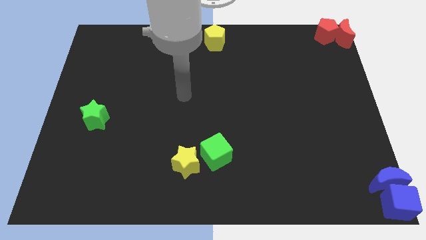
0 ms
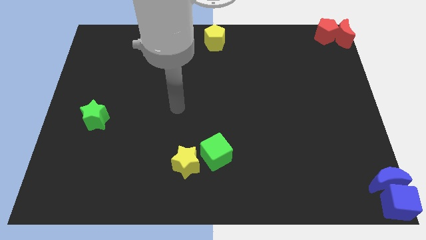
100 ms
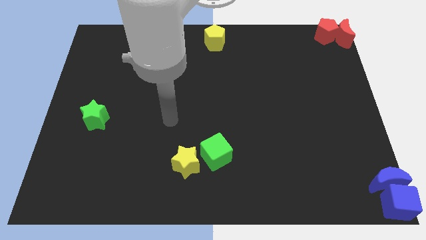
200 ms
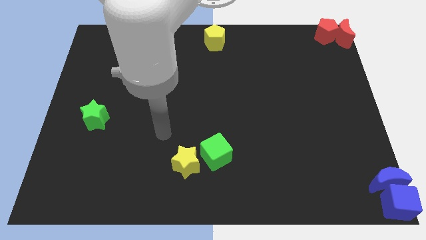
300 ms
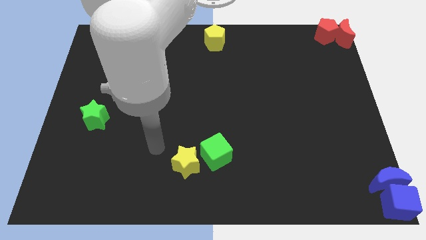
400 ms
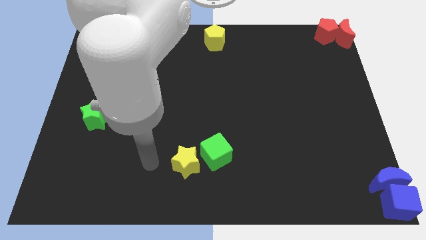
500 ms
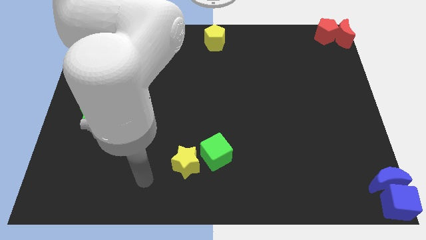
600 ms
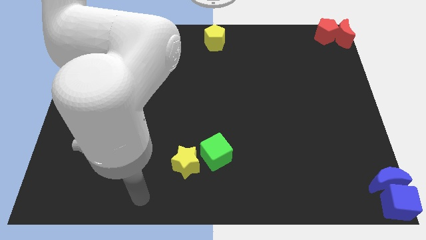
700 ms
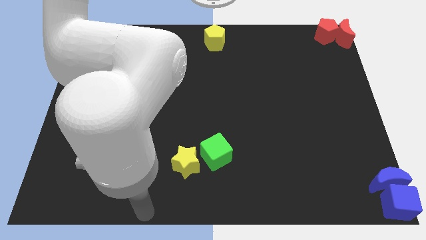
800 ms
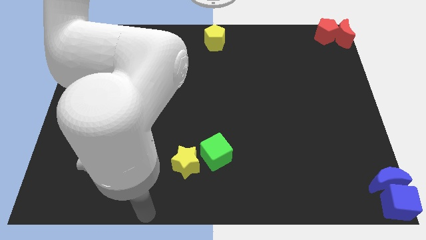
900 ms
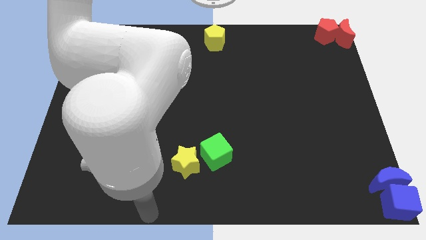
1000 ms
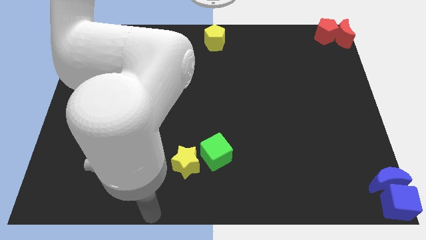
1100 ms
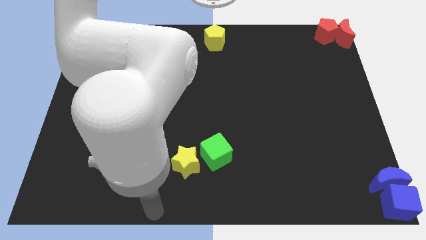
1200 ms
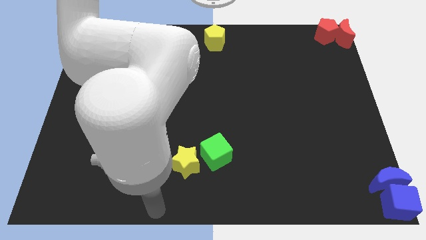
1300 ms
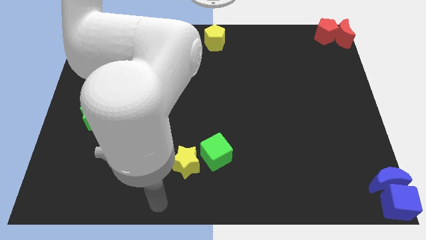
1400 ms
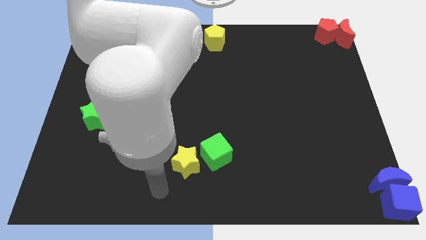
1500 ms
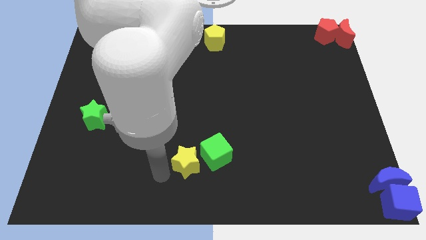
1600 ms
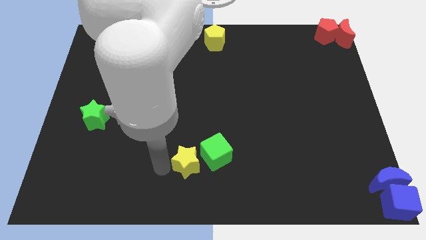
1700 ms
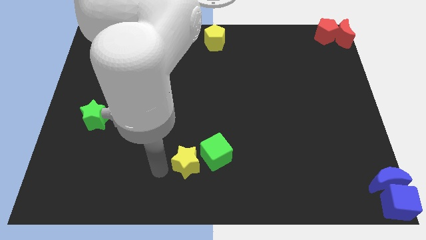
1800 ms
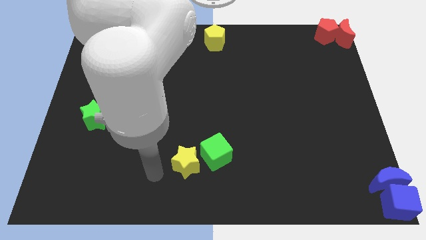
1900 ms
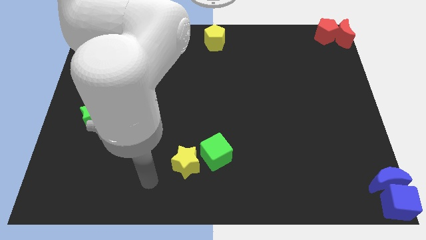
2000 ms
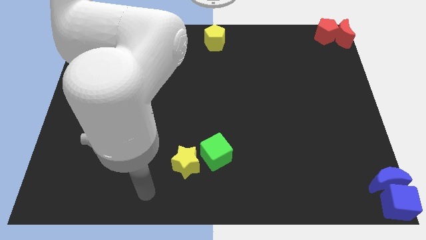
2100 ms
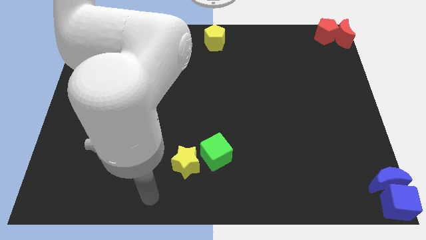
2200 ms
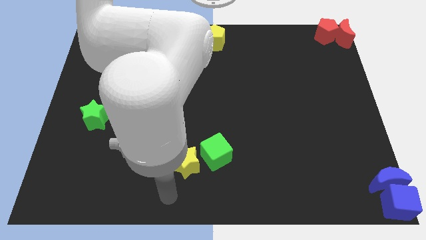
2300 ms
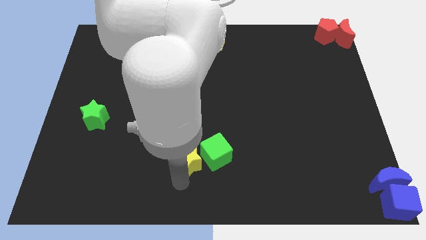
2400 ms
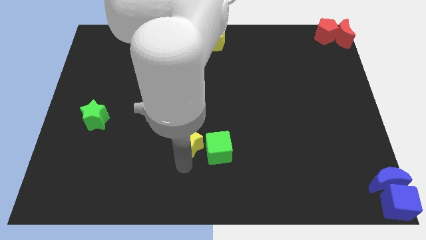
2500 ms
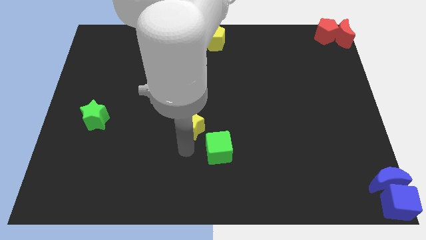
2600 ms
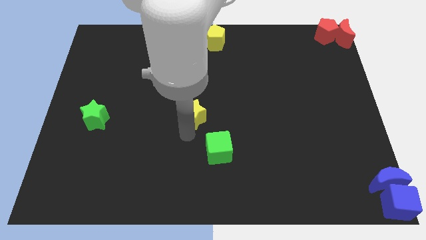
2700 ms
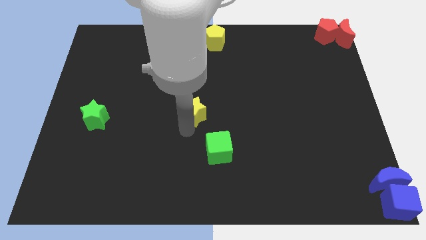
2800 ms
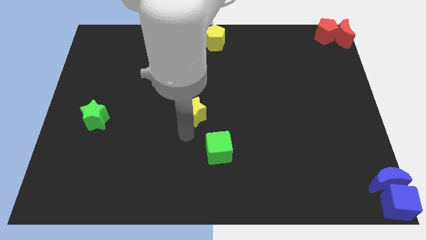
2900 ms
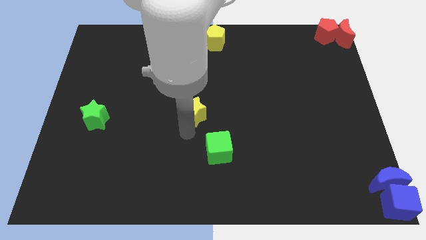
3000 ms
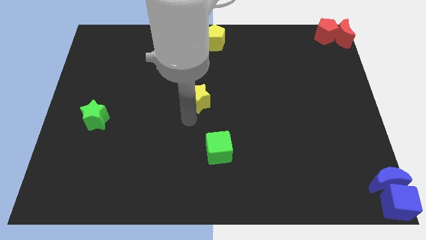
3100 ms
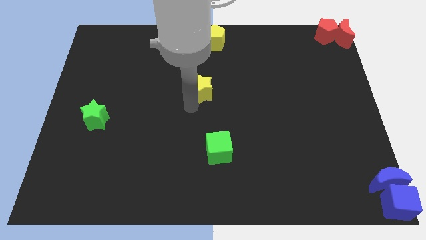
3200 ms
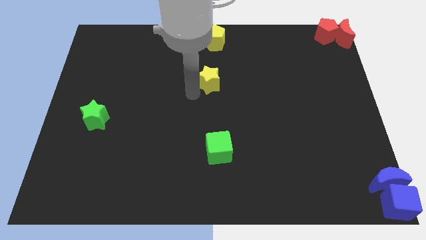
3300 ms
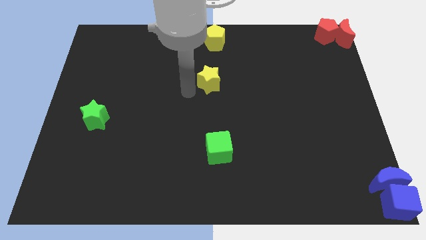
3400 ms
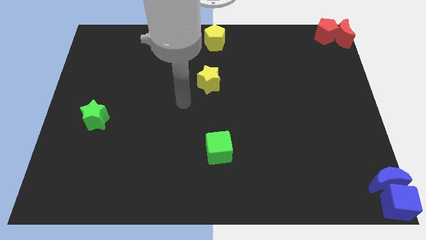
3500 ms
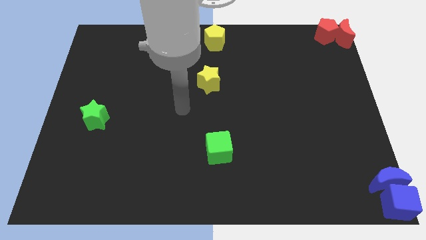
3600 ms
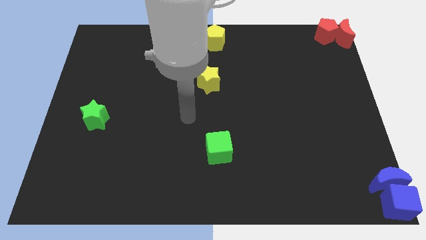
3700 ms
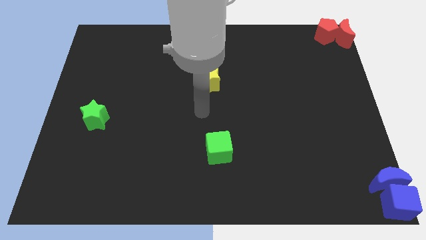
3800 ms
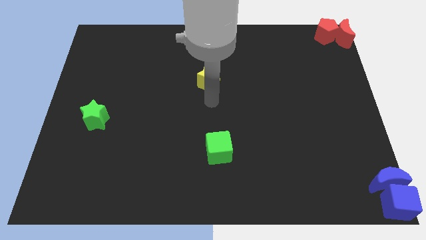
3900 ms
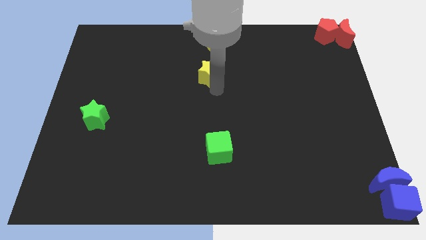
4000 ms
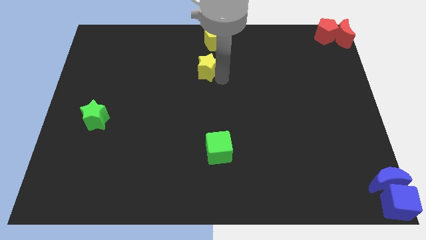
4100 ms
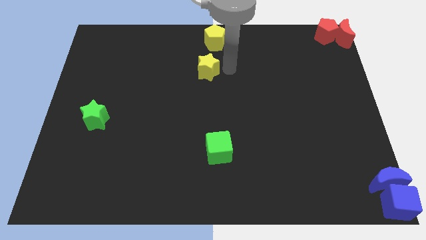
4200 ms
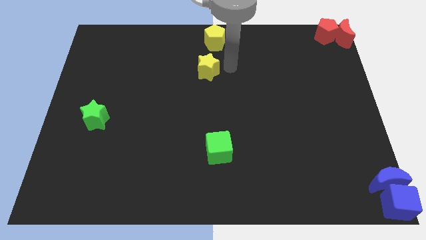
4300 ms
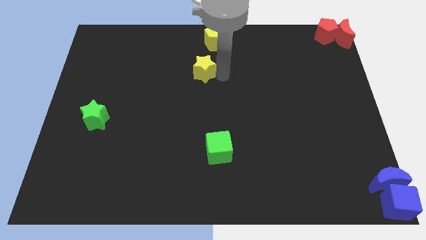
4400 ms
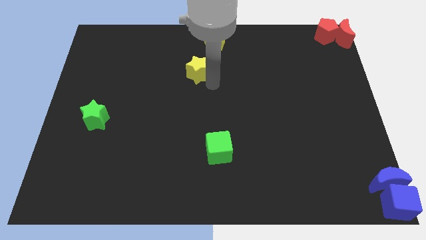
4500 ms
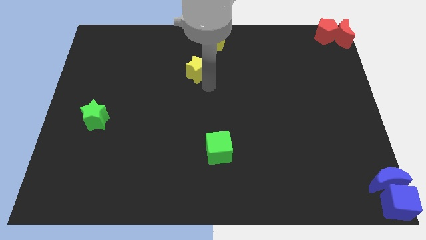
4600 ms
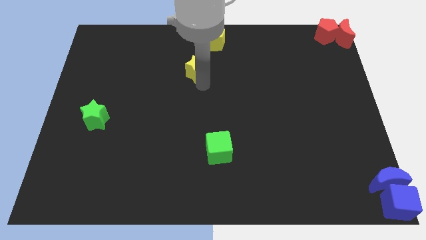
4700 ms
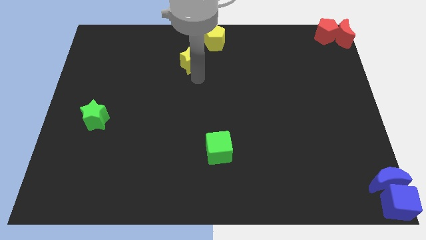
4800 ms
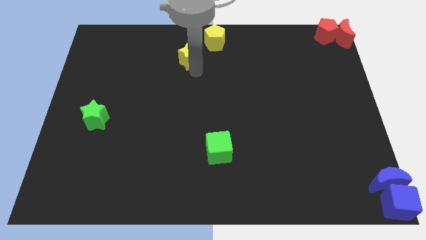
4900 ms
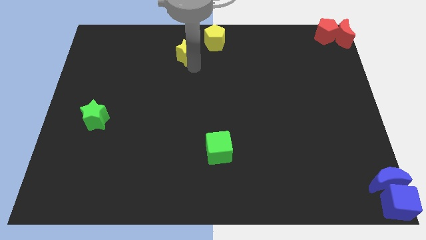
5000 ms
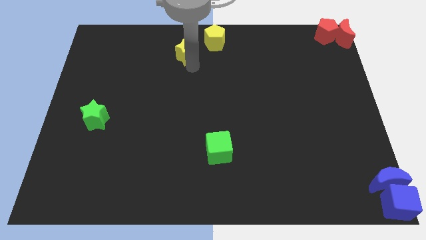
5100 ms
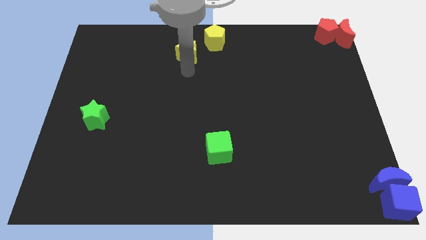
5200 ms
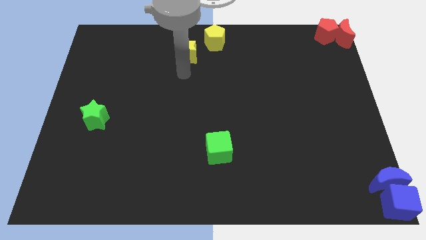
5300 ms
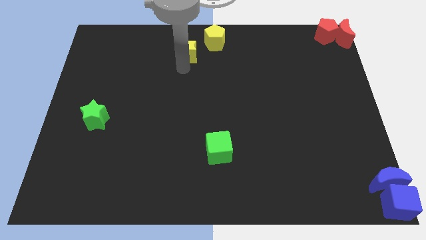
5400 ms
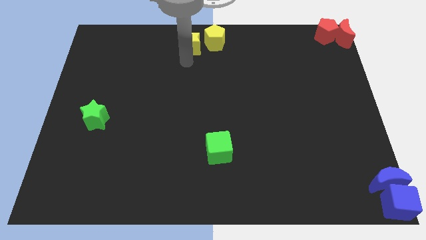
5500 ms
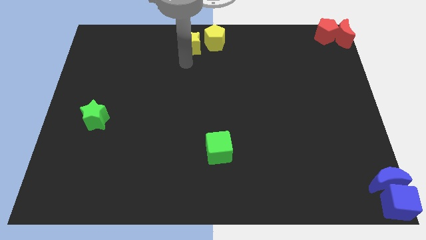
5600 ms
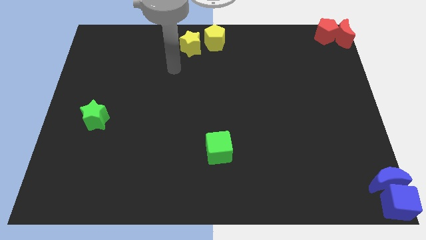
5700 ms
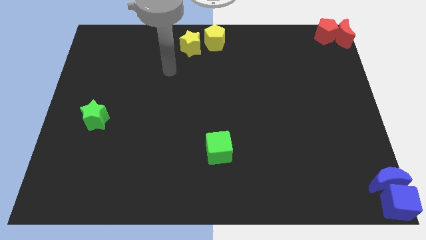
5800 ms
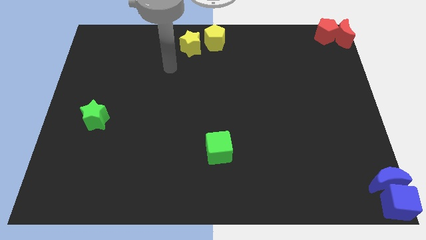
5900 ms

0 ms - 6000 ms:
push the yellow star to the left of the yellow pentagon

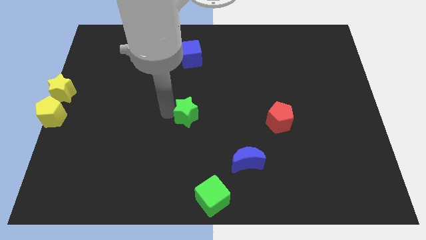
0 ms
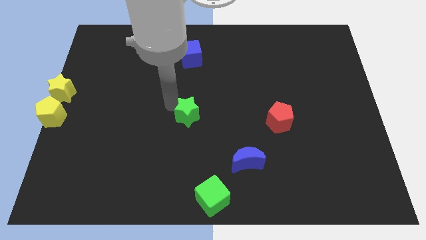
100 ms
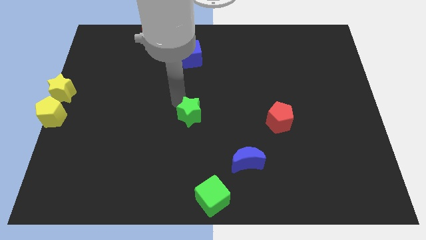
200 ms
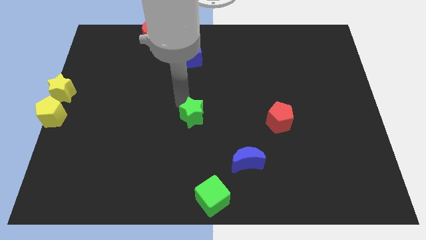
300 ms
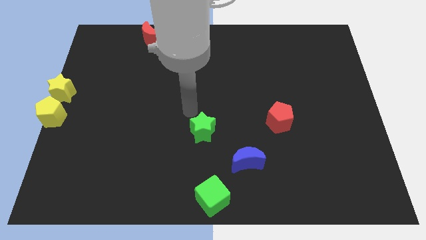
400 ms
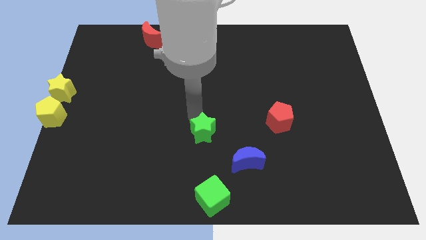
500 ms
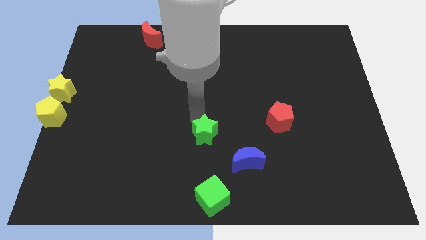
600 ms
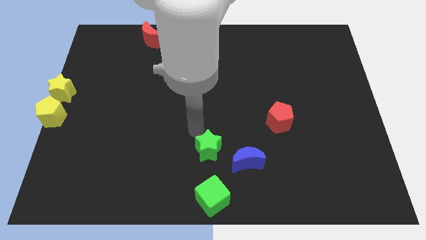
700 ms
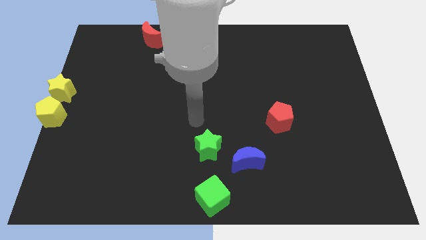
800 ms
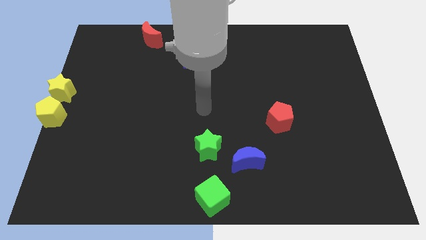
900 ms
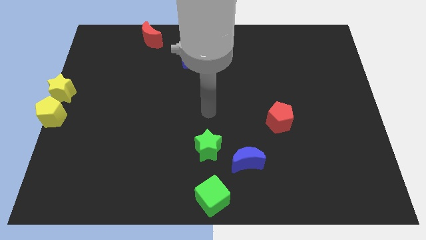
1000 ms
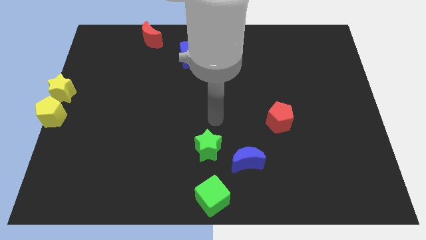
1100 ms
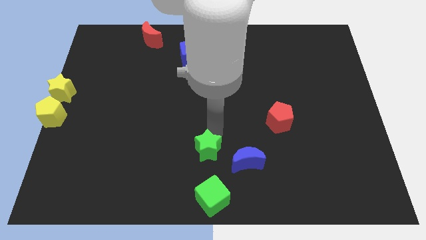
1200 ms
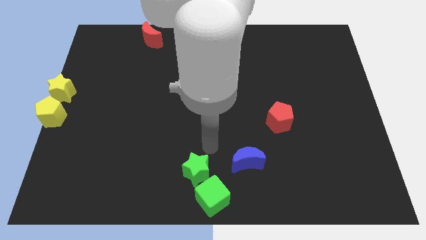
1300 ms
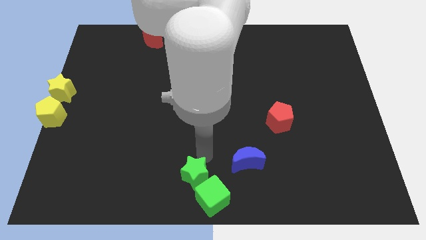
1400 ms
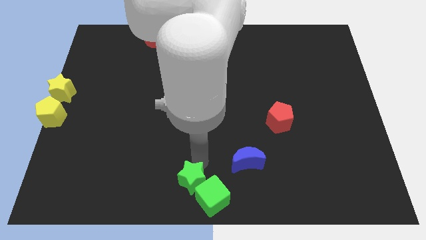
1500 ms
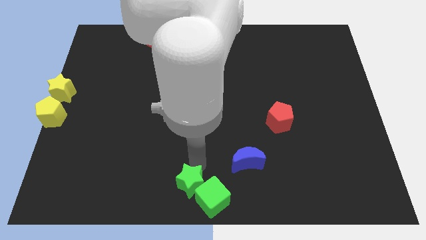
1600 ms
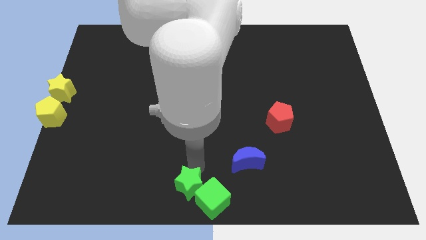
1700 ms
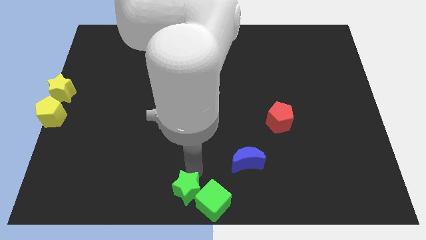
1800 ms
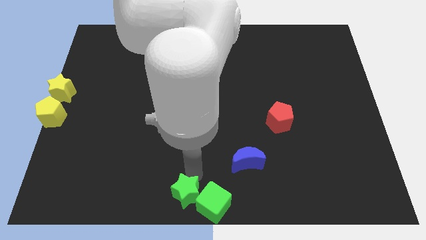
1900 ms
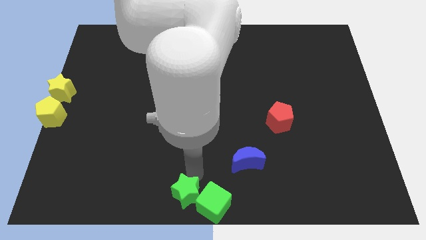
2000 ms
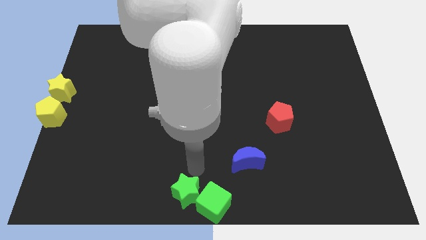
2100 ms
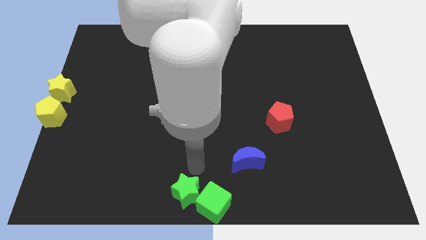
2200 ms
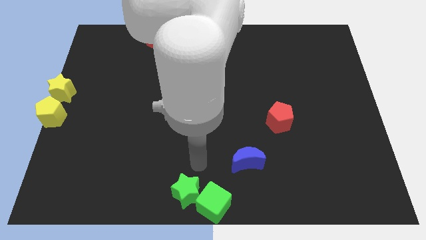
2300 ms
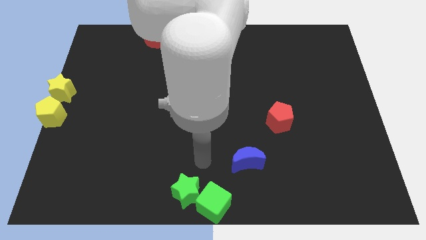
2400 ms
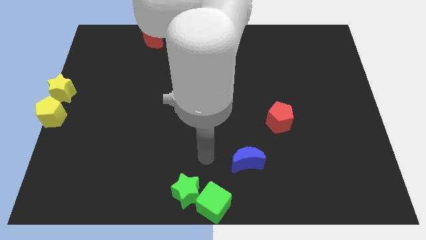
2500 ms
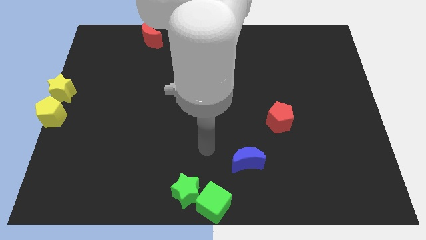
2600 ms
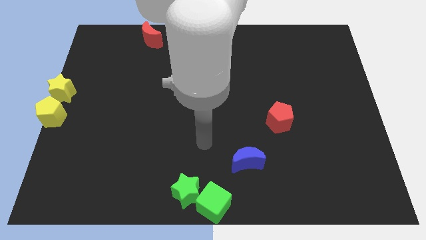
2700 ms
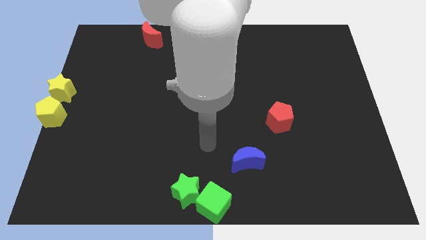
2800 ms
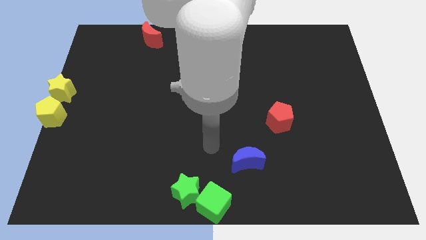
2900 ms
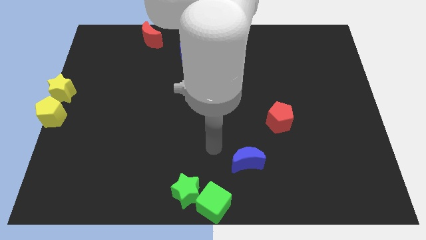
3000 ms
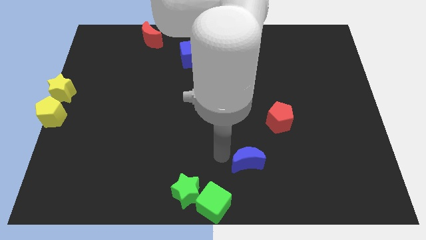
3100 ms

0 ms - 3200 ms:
move the green star at the bottom center
